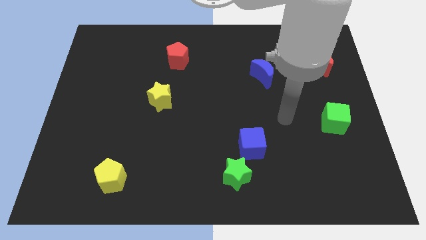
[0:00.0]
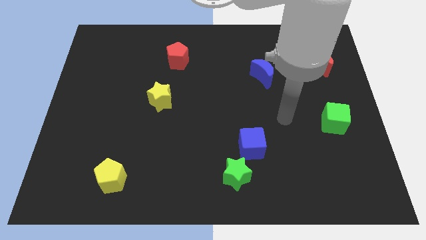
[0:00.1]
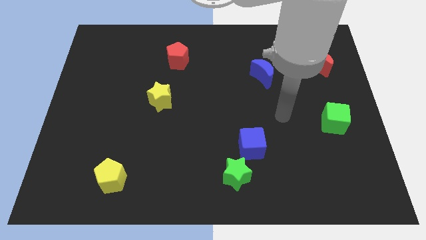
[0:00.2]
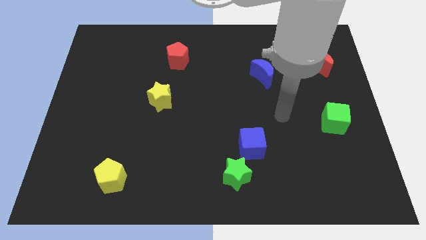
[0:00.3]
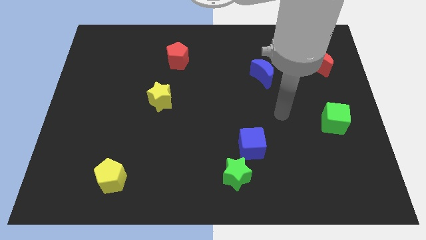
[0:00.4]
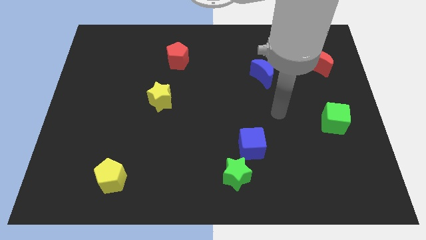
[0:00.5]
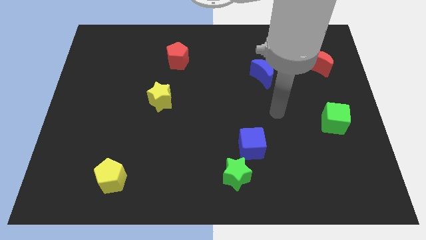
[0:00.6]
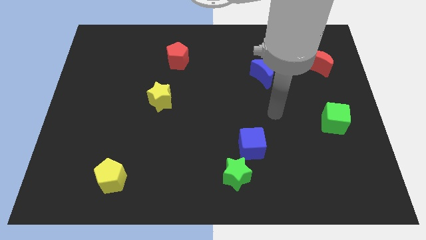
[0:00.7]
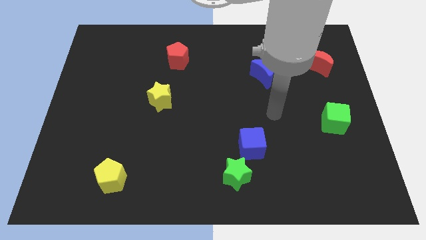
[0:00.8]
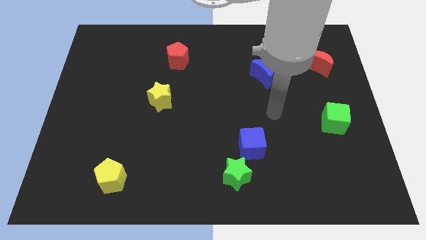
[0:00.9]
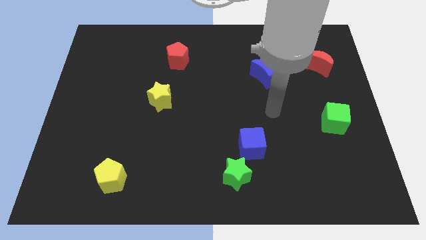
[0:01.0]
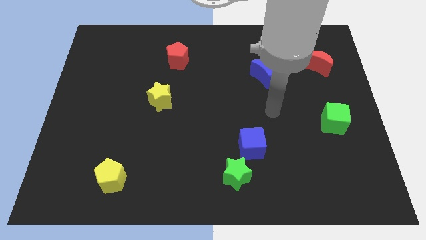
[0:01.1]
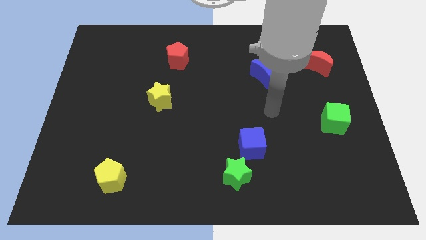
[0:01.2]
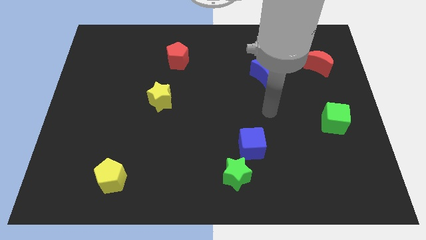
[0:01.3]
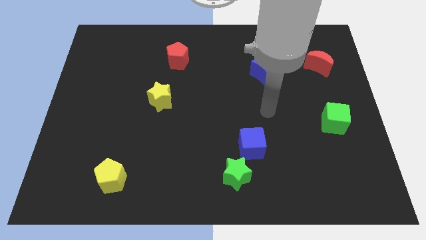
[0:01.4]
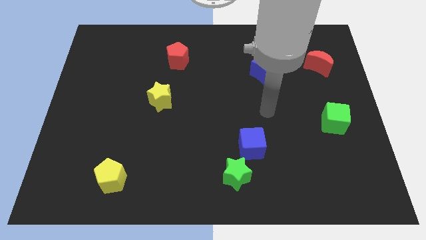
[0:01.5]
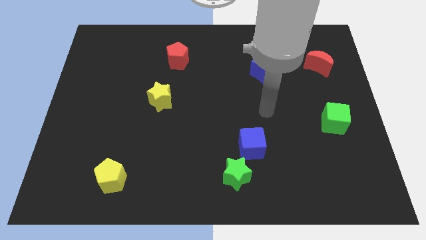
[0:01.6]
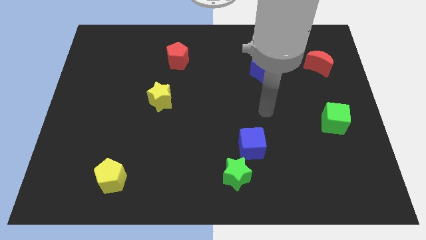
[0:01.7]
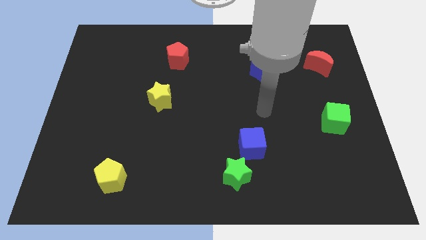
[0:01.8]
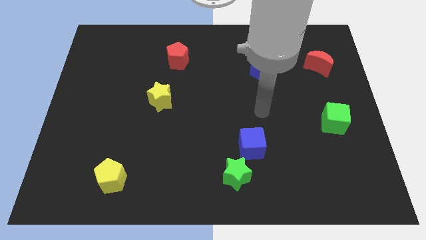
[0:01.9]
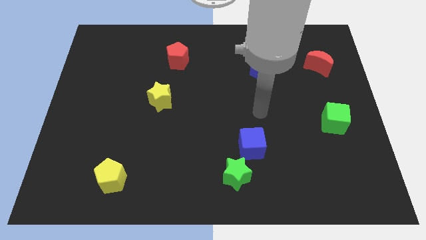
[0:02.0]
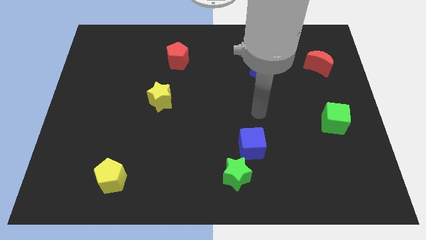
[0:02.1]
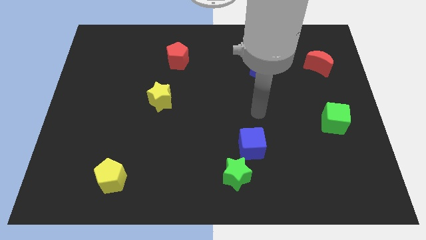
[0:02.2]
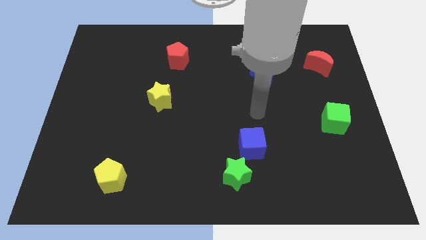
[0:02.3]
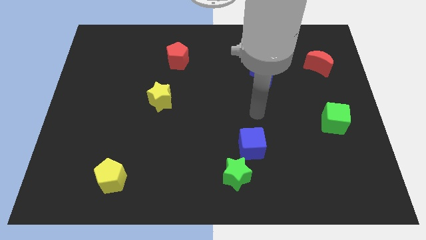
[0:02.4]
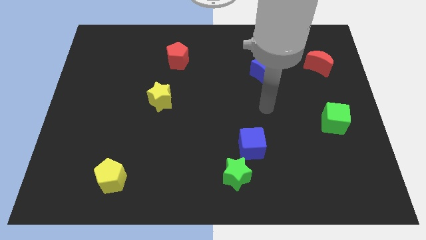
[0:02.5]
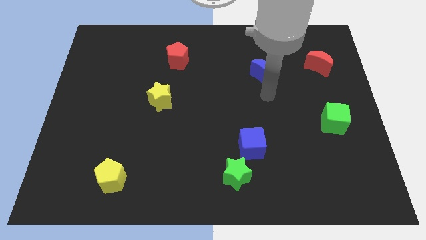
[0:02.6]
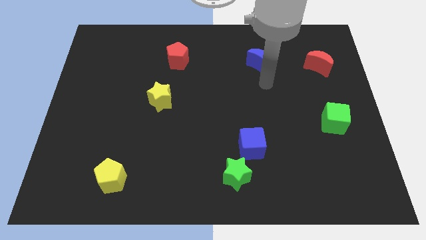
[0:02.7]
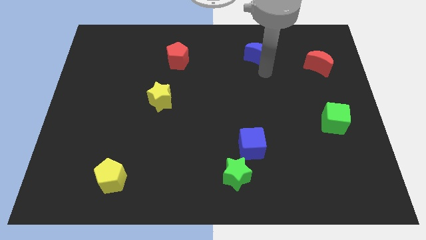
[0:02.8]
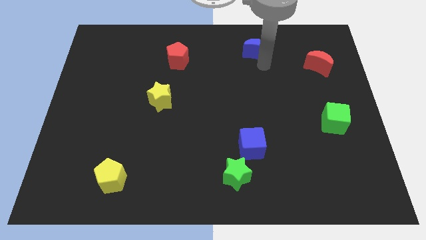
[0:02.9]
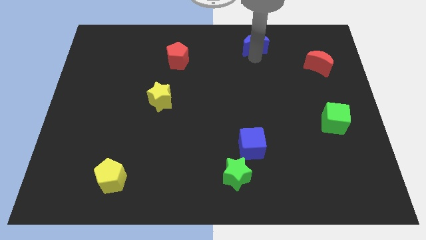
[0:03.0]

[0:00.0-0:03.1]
push the blue moon towards the top side of the board

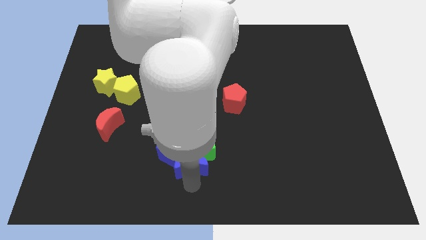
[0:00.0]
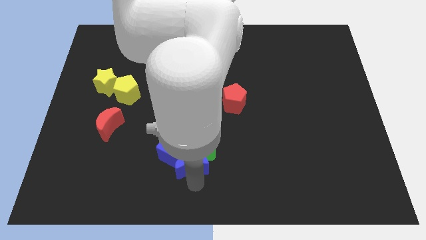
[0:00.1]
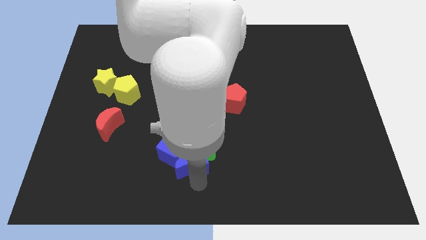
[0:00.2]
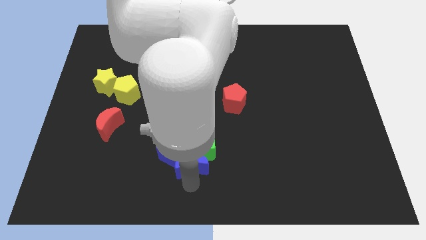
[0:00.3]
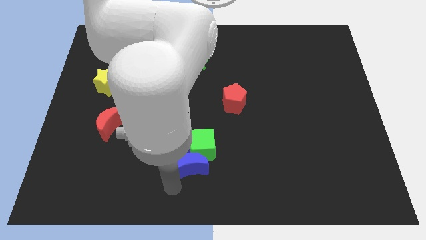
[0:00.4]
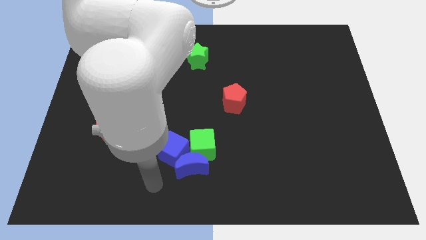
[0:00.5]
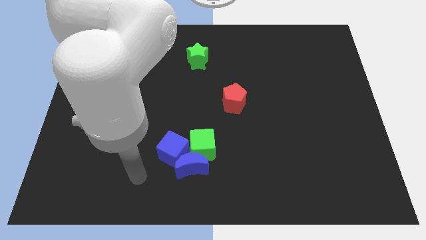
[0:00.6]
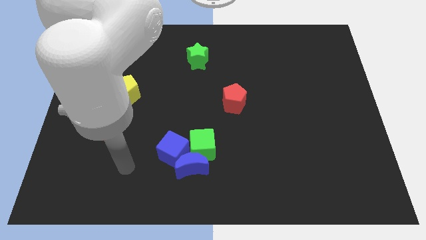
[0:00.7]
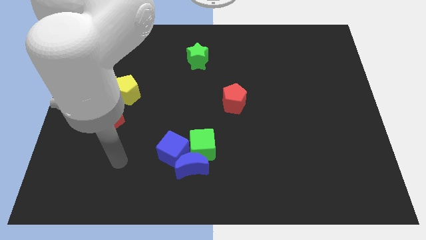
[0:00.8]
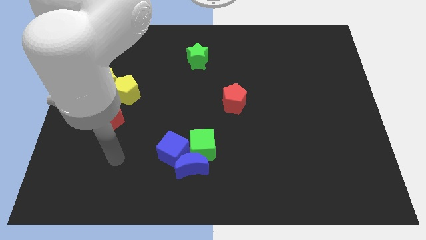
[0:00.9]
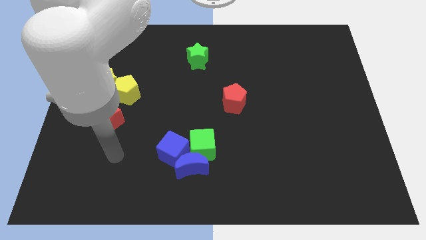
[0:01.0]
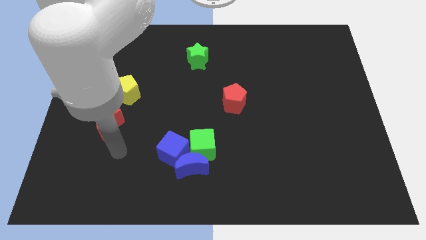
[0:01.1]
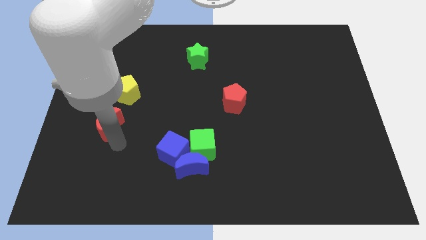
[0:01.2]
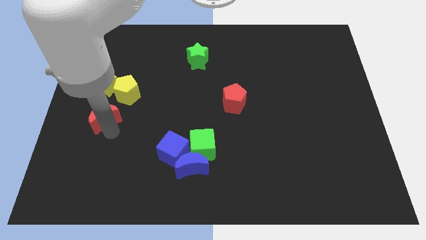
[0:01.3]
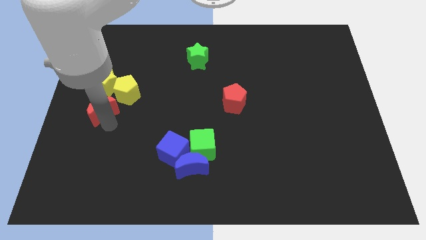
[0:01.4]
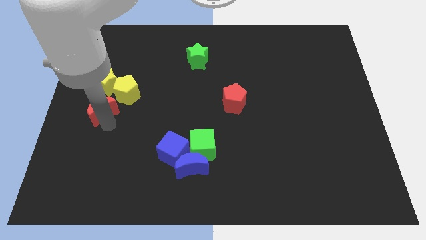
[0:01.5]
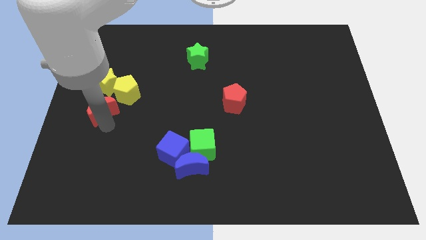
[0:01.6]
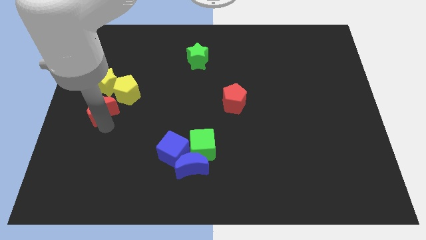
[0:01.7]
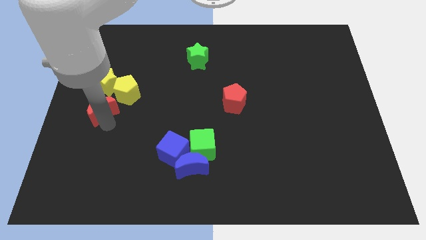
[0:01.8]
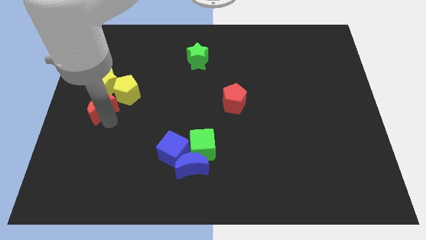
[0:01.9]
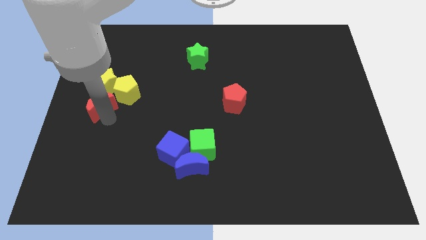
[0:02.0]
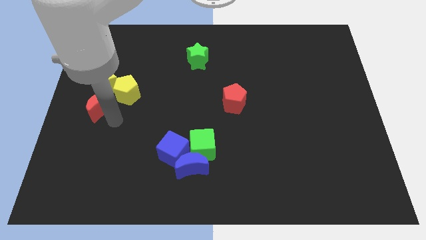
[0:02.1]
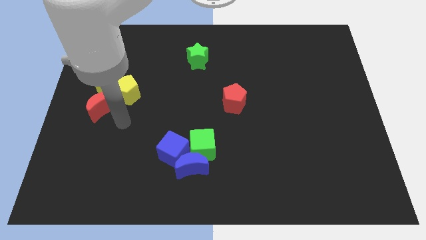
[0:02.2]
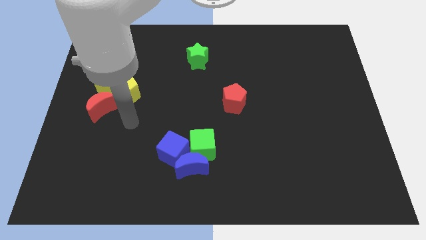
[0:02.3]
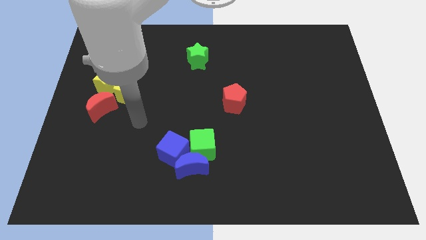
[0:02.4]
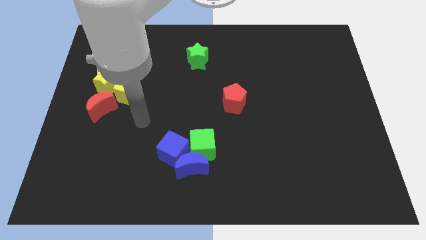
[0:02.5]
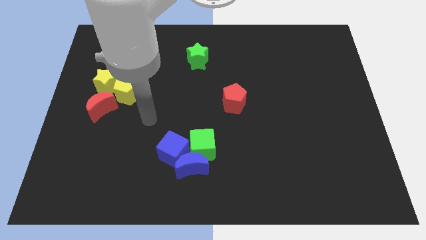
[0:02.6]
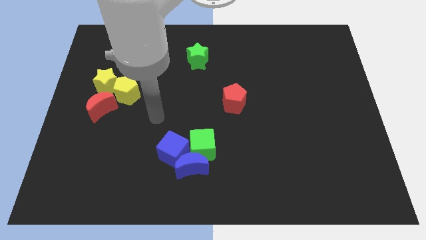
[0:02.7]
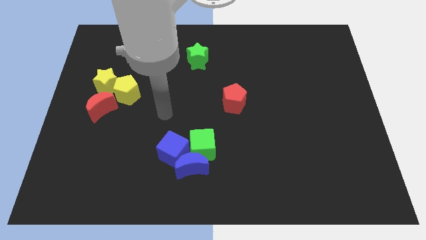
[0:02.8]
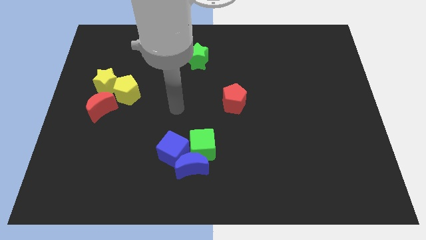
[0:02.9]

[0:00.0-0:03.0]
place the red moon at the bottom of yellow star

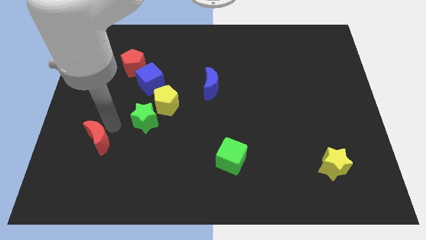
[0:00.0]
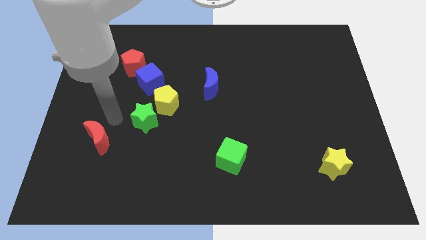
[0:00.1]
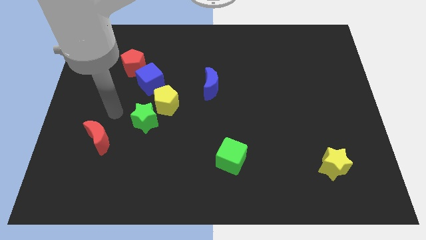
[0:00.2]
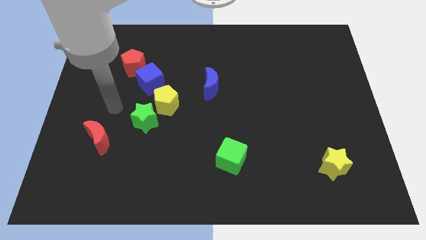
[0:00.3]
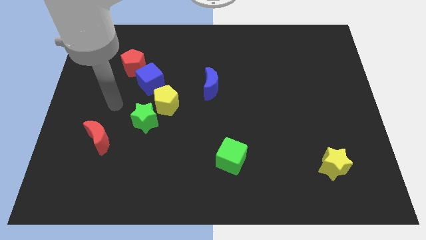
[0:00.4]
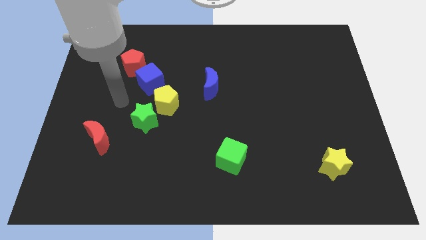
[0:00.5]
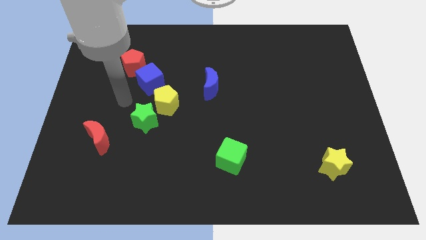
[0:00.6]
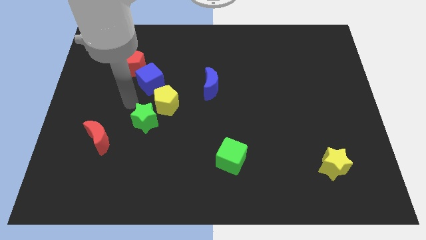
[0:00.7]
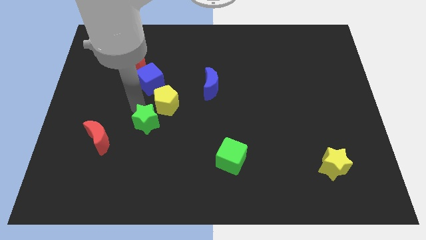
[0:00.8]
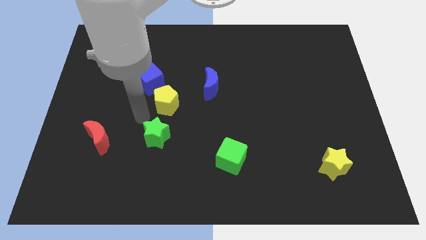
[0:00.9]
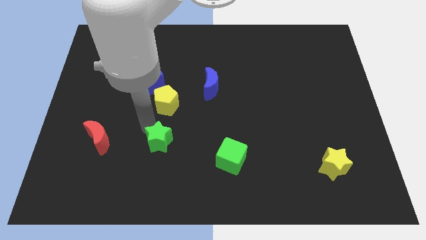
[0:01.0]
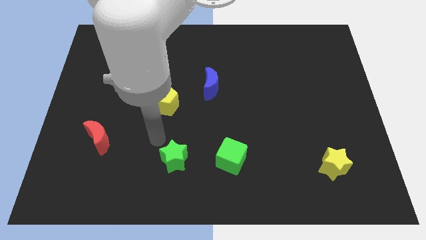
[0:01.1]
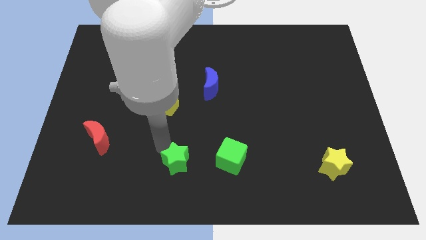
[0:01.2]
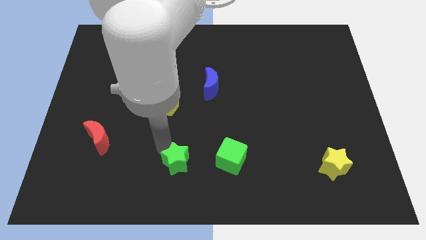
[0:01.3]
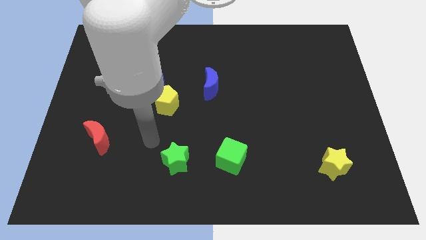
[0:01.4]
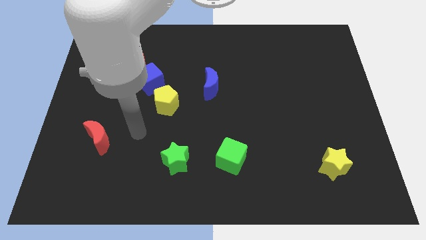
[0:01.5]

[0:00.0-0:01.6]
move the green star to the left of the green cube

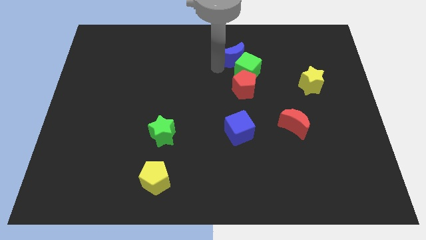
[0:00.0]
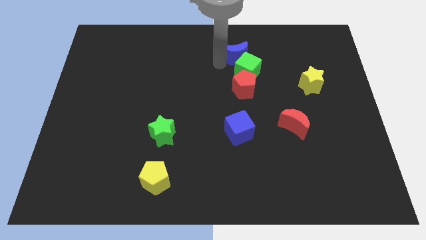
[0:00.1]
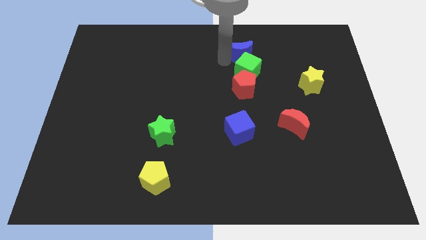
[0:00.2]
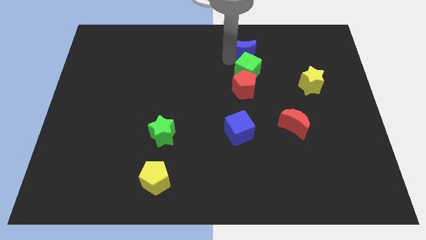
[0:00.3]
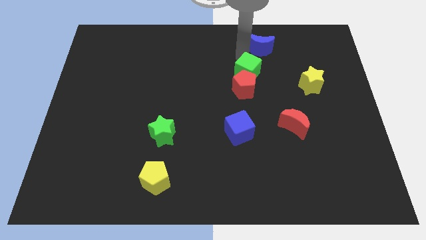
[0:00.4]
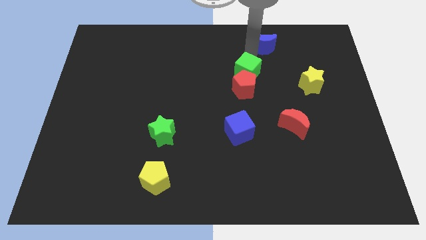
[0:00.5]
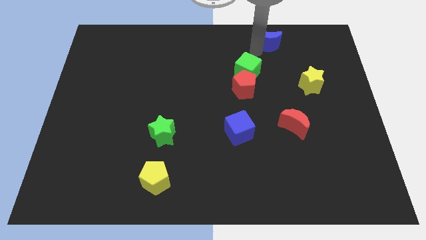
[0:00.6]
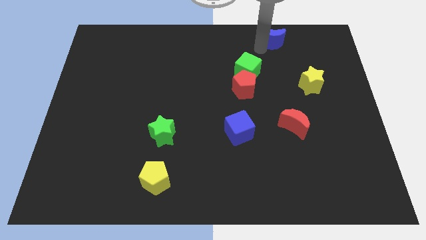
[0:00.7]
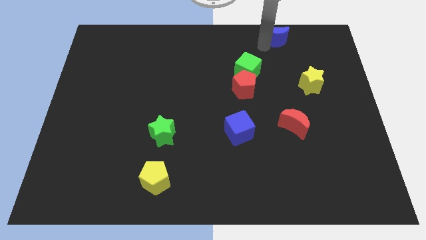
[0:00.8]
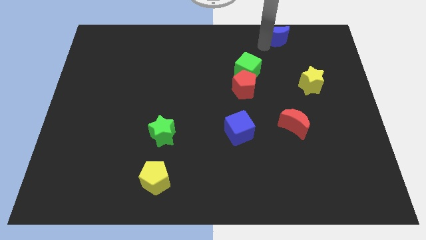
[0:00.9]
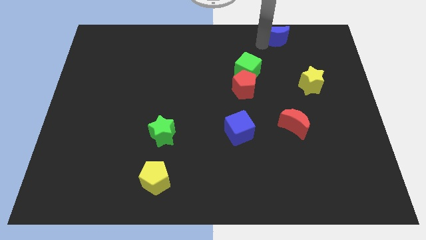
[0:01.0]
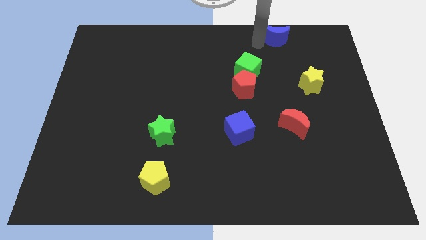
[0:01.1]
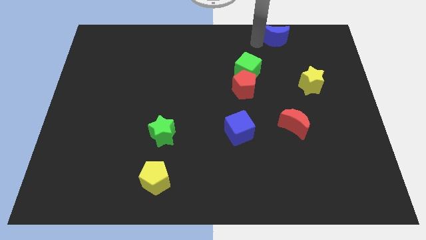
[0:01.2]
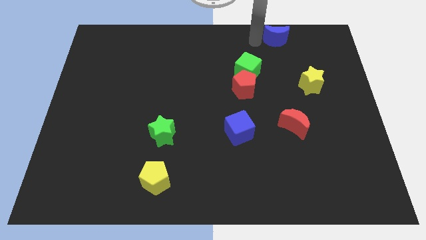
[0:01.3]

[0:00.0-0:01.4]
move the blue moon towards the top right corner
